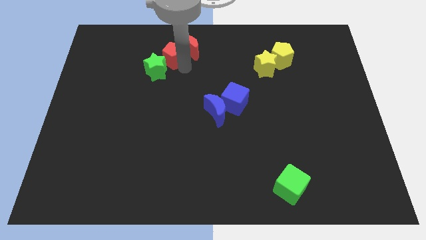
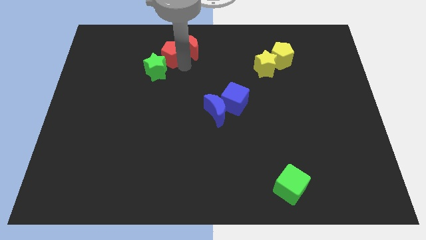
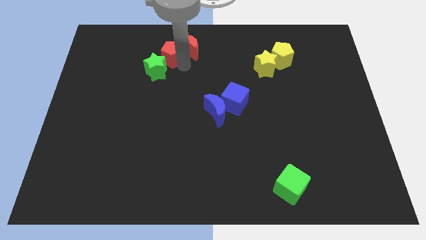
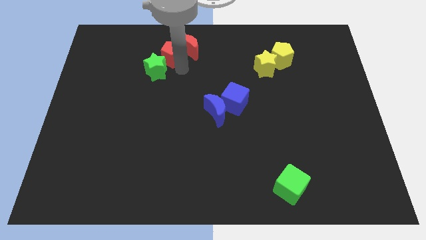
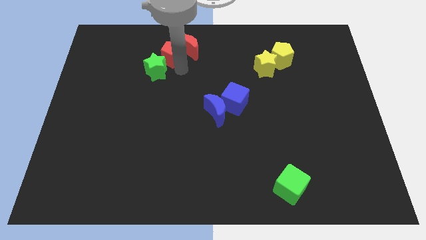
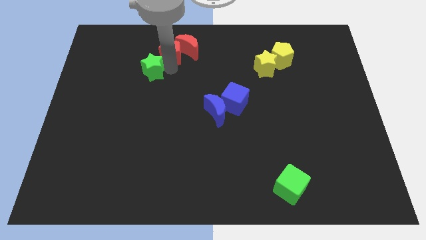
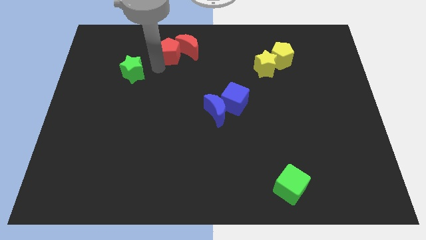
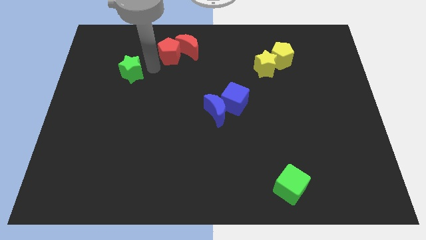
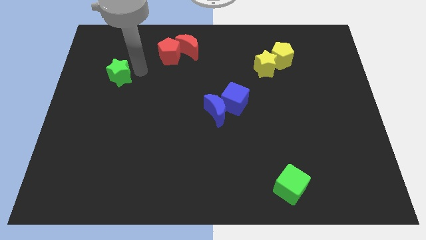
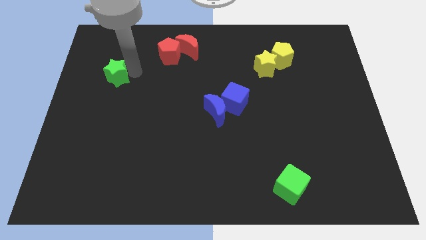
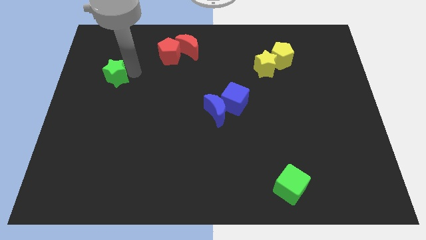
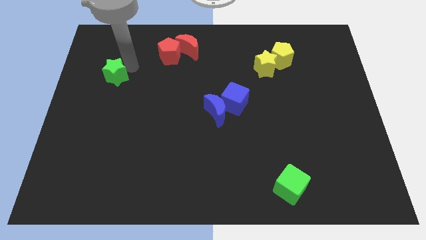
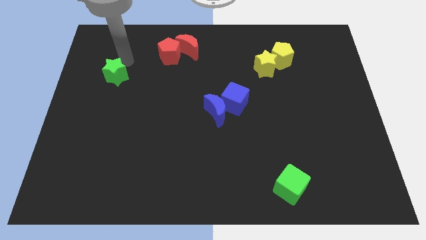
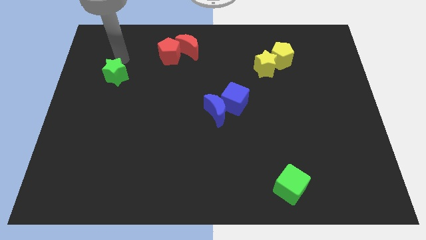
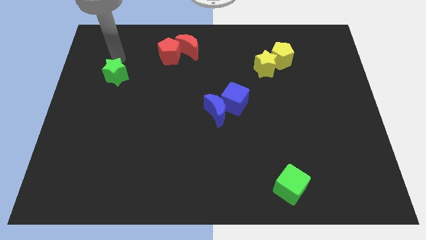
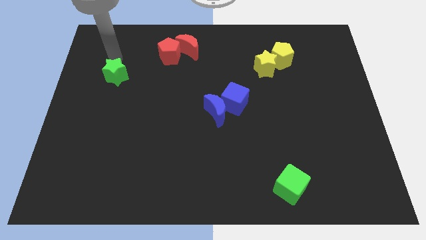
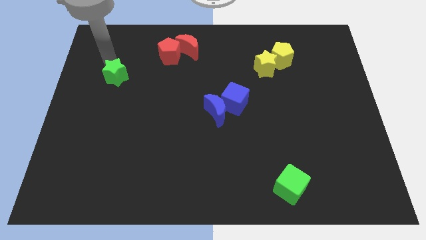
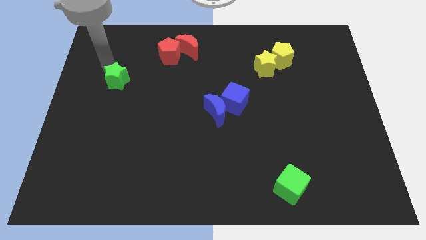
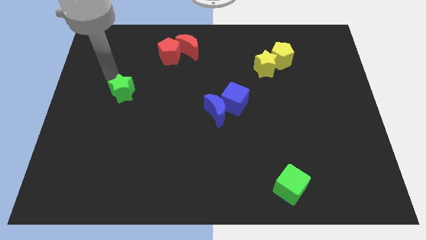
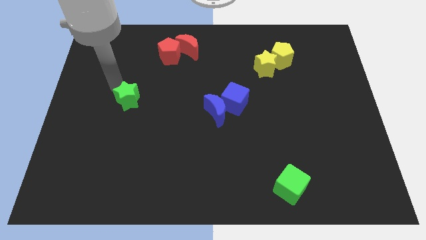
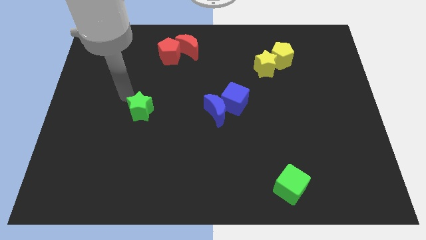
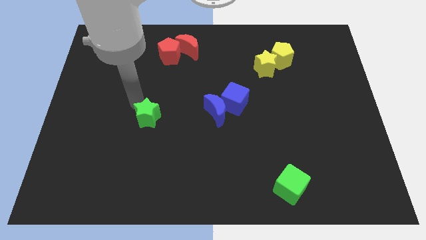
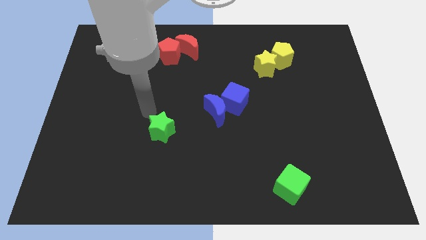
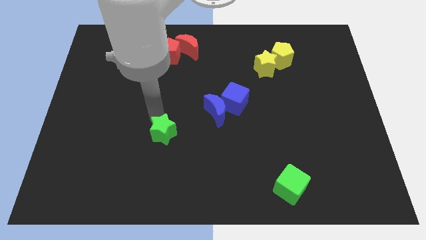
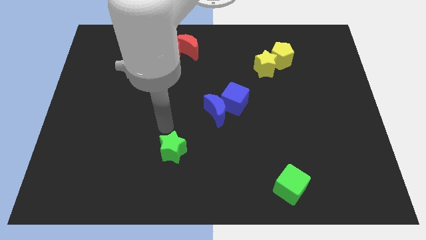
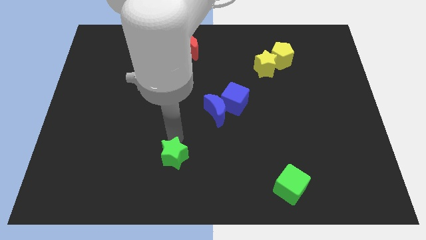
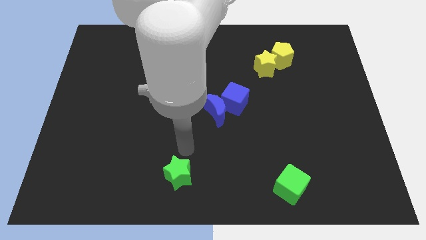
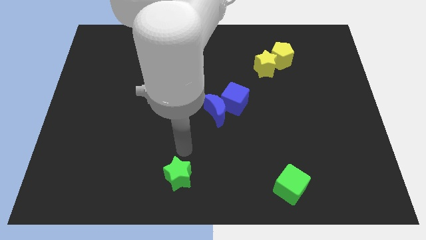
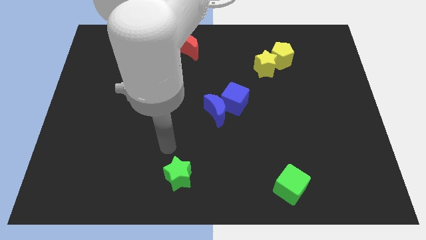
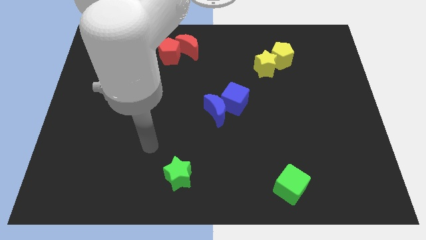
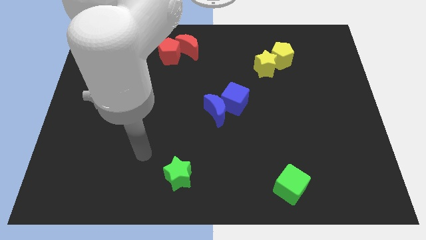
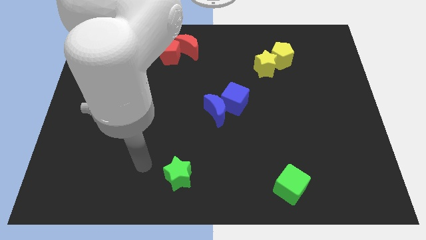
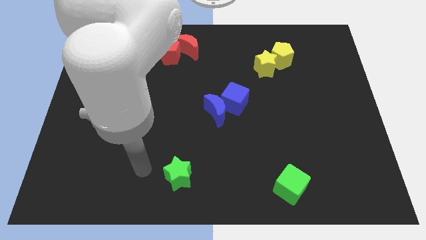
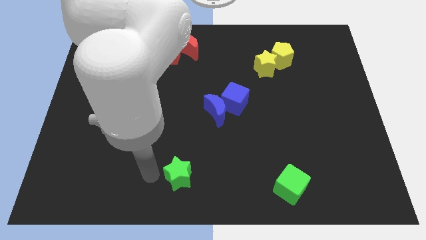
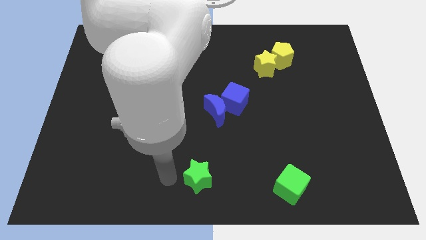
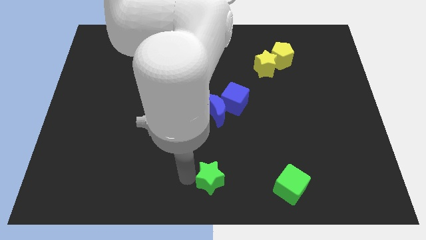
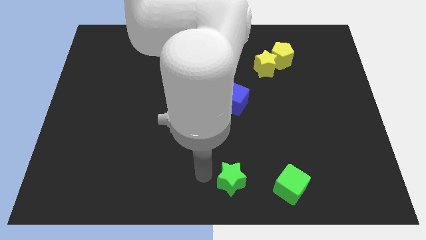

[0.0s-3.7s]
place green star parallel to green cube

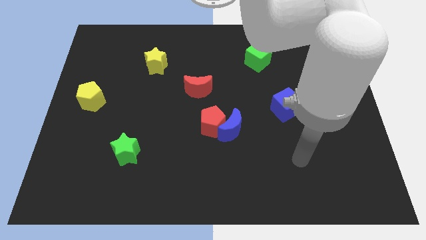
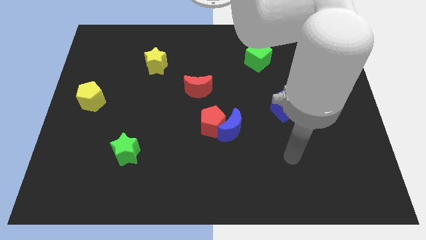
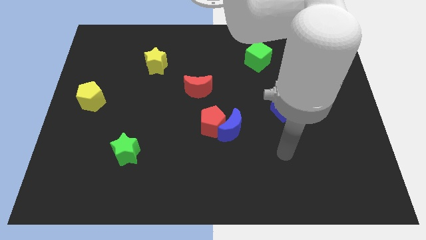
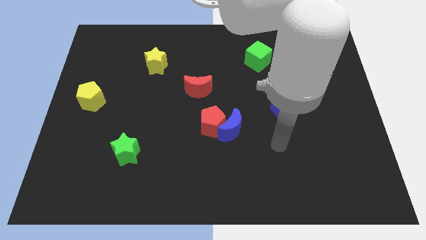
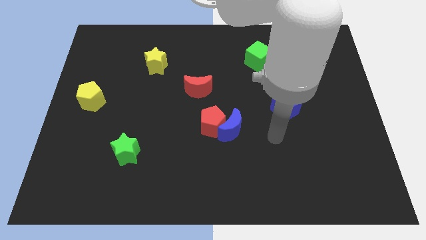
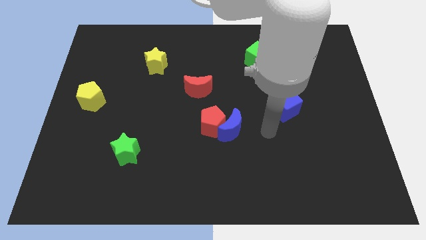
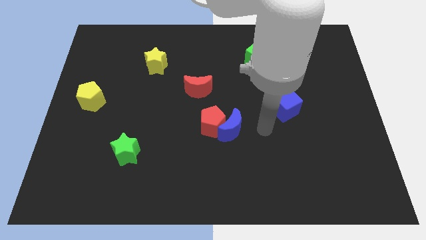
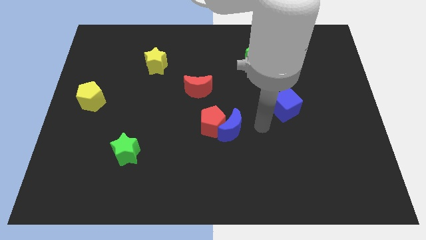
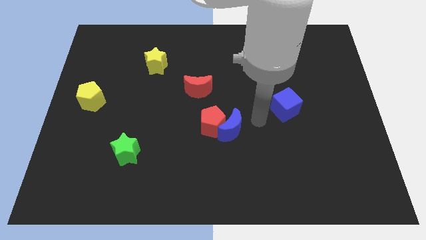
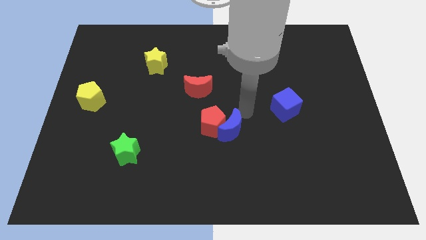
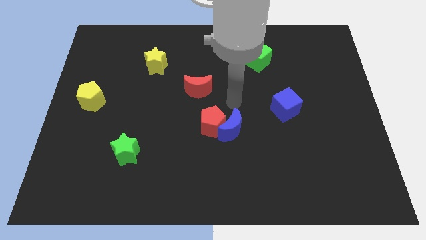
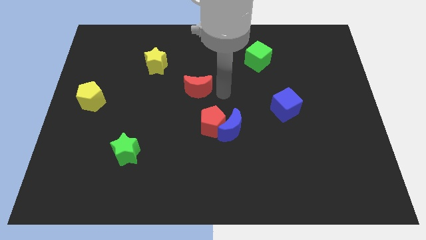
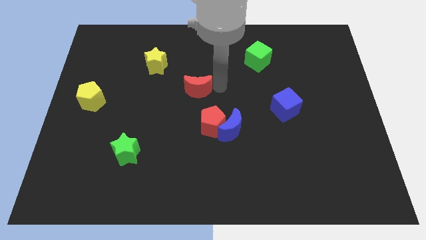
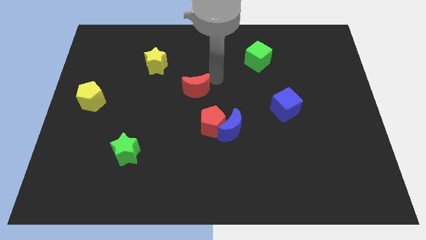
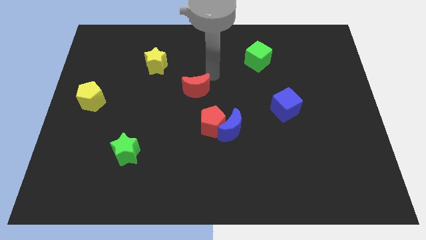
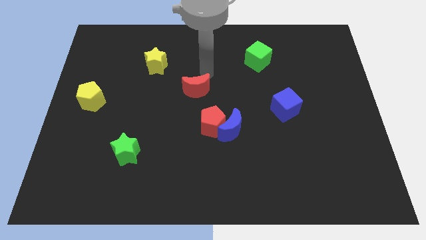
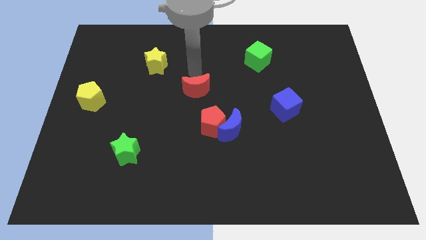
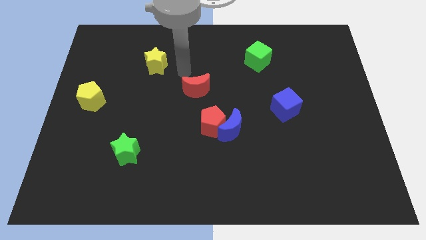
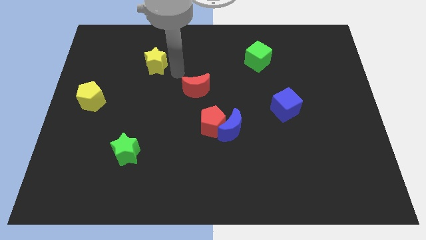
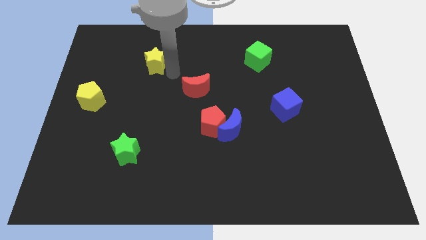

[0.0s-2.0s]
touch the red moon

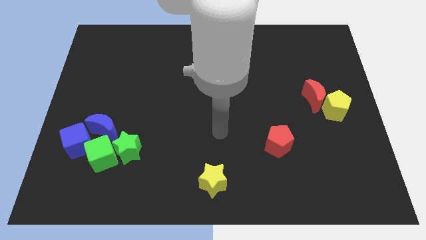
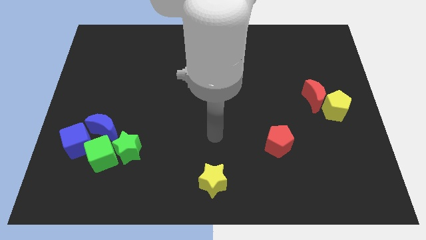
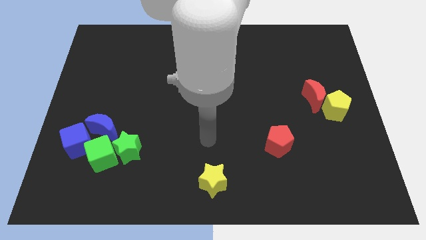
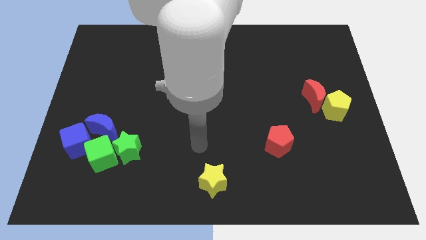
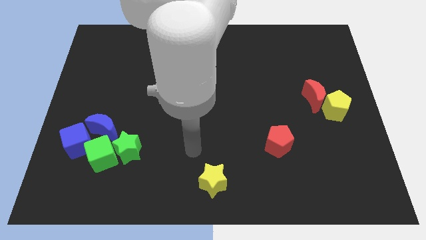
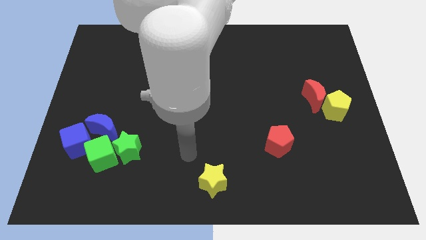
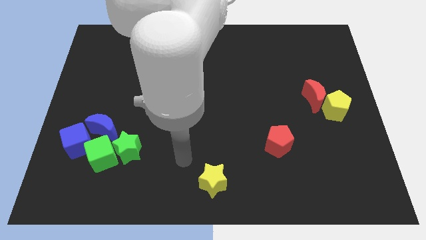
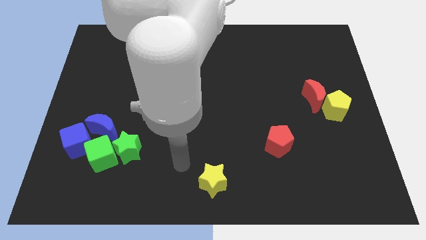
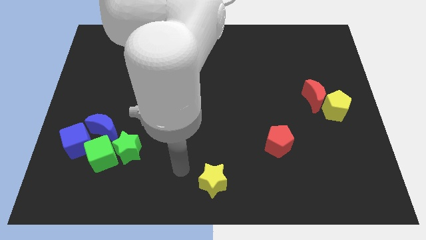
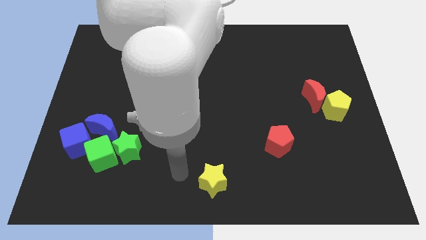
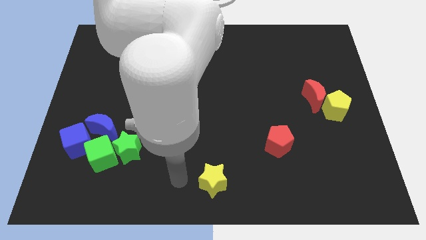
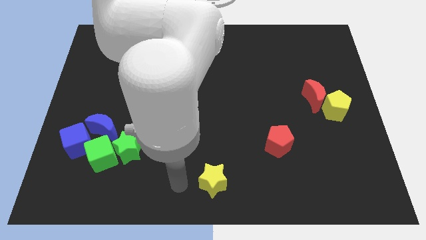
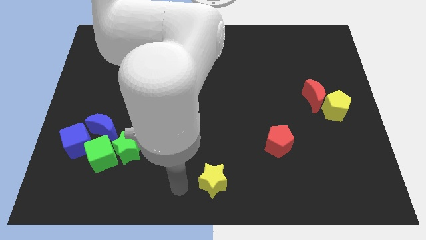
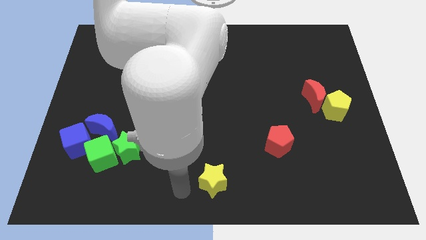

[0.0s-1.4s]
move arm towards the yellow star on the bottom center of the board

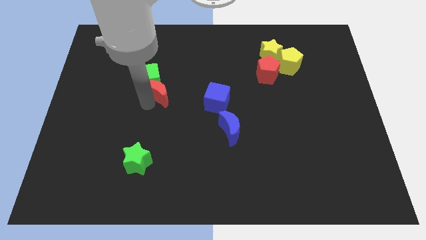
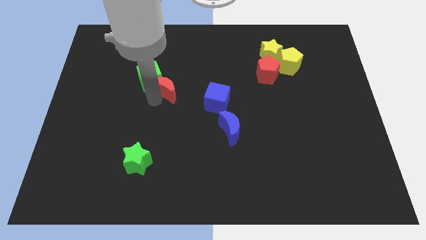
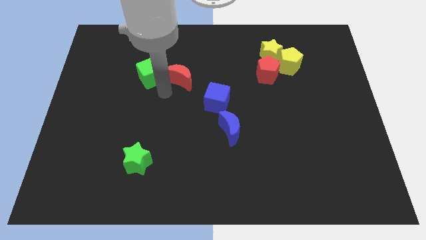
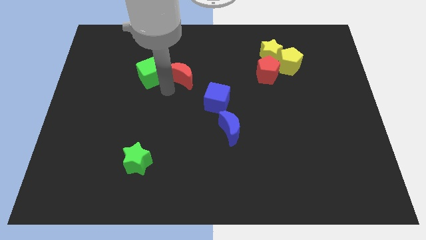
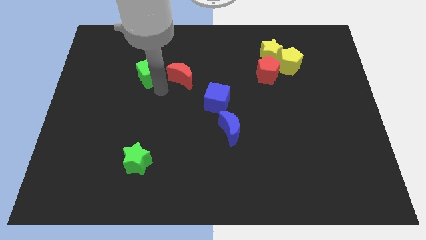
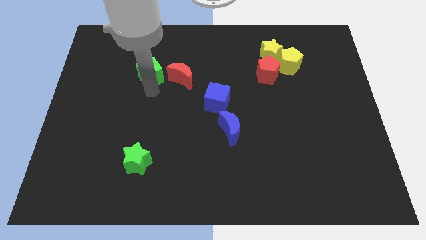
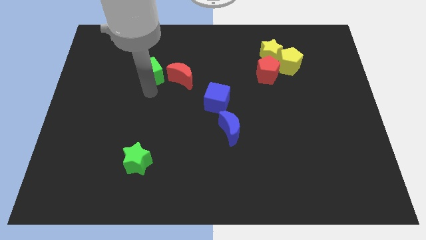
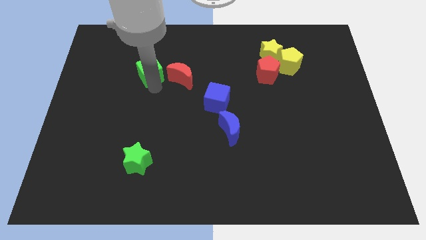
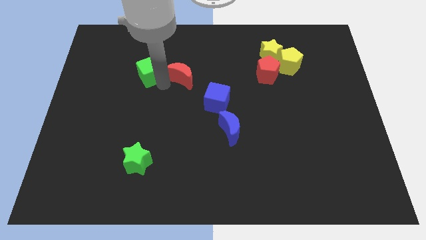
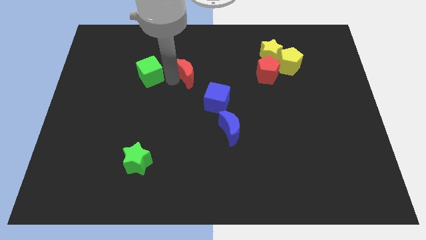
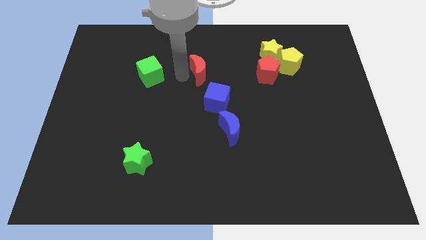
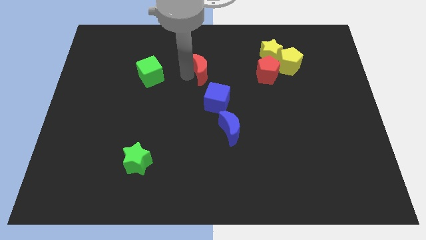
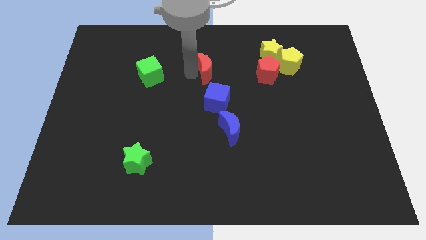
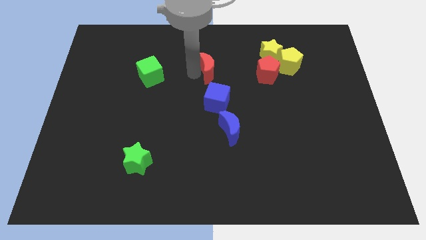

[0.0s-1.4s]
move the red crescent to the top of the blue cube

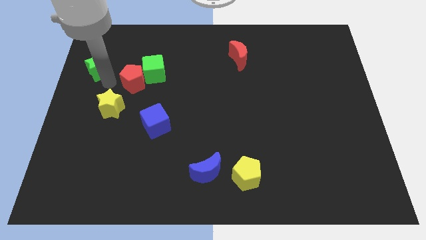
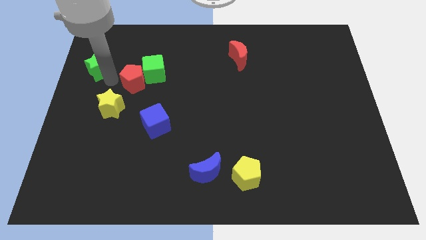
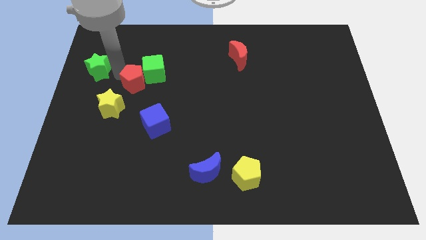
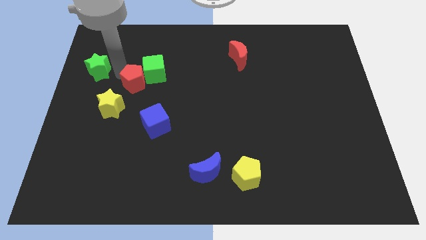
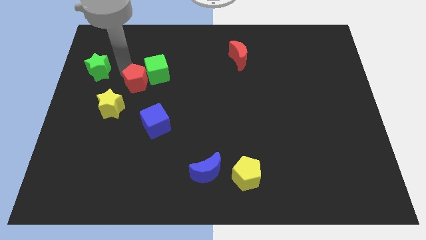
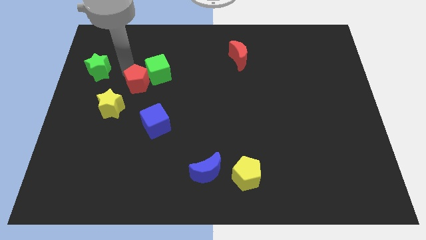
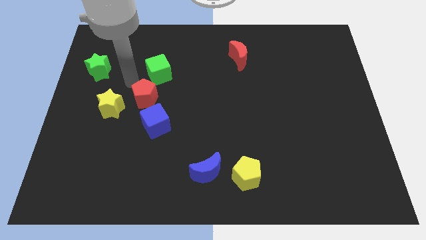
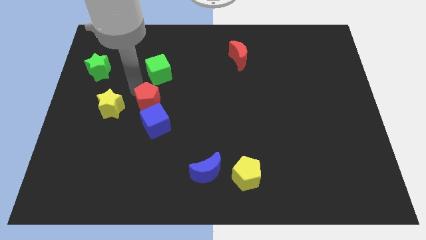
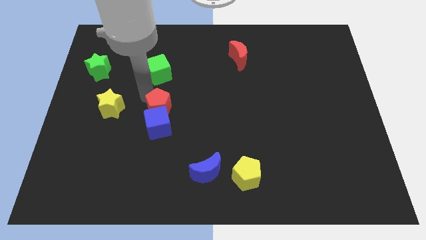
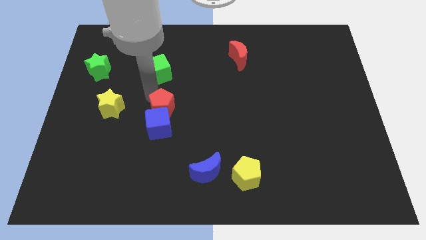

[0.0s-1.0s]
slide the red pentagon to the top of the blue cube
